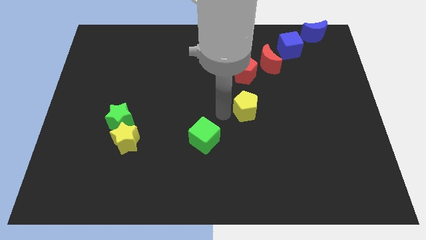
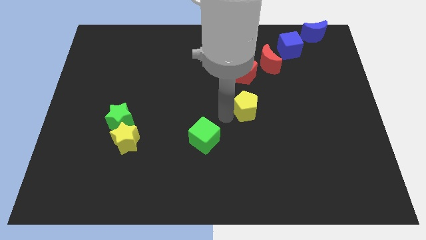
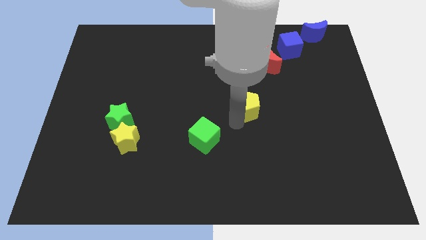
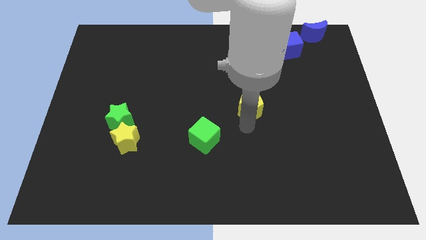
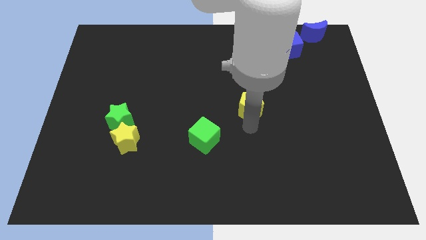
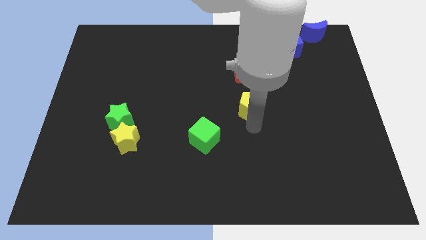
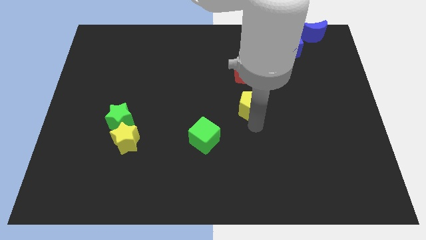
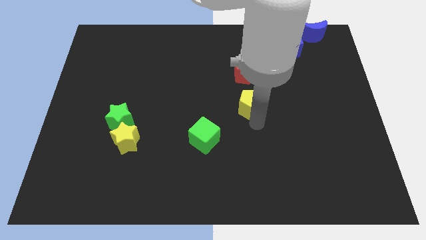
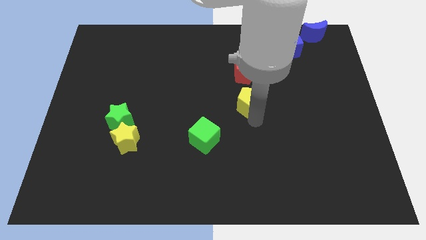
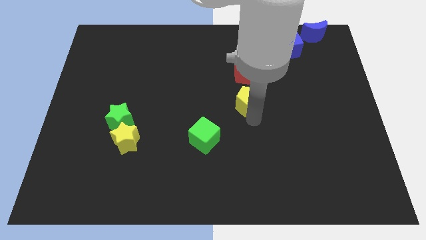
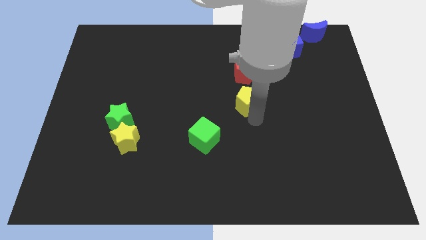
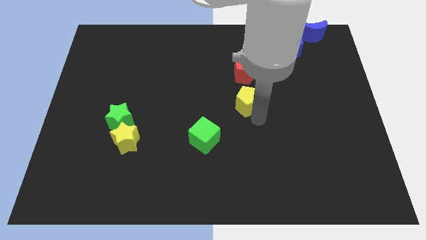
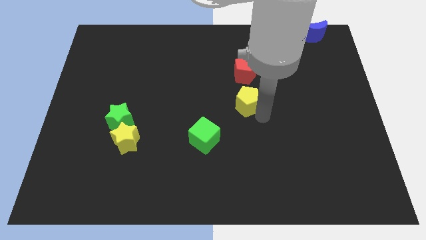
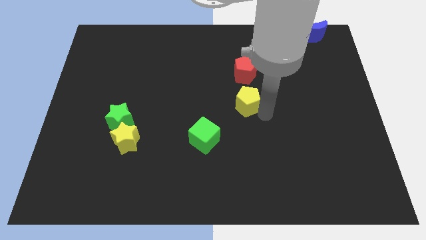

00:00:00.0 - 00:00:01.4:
place the yellow pentagon at the bottom of red pentagon

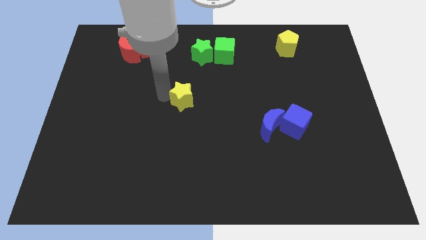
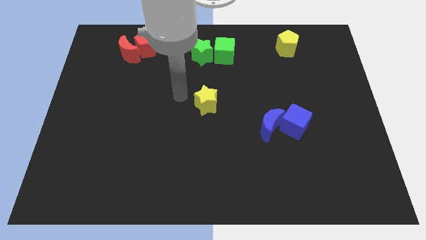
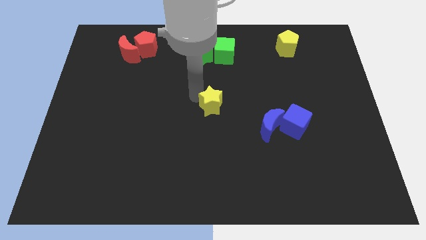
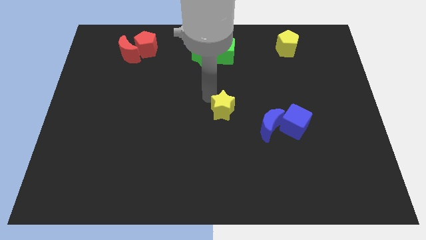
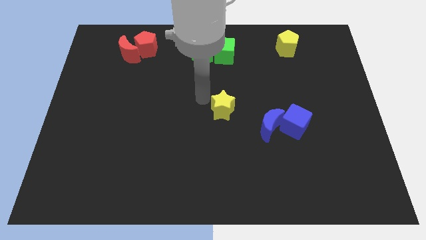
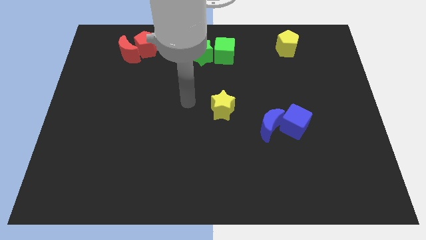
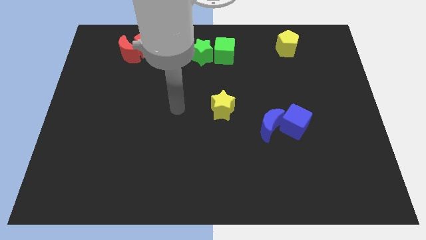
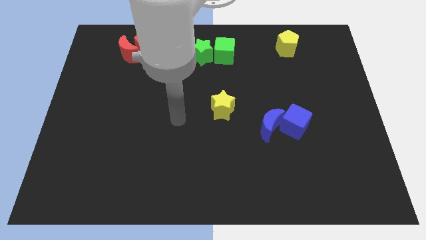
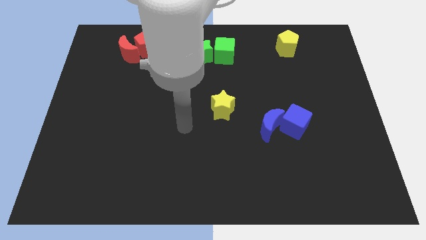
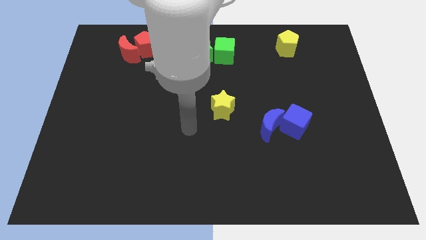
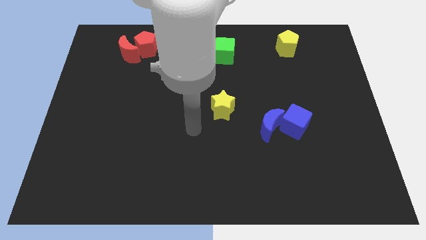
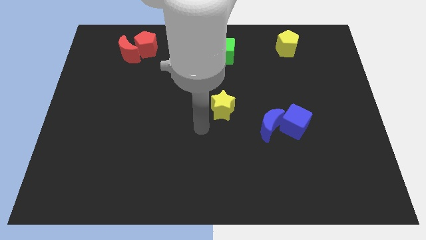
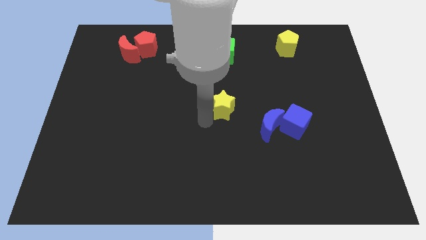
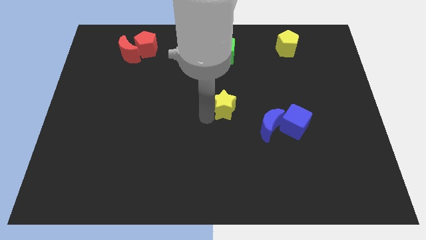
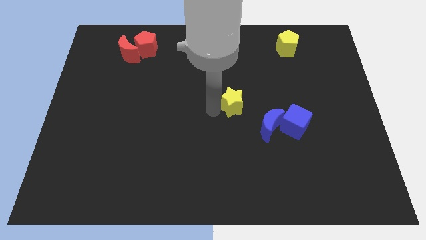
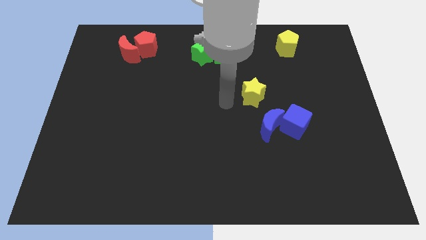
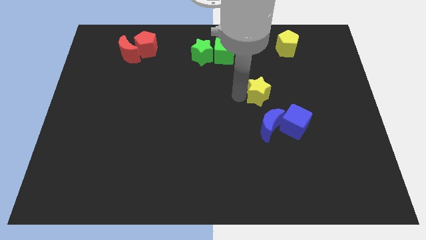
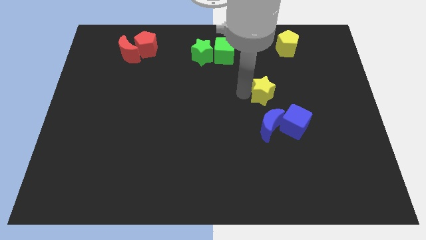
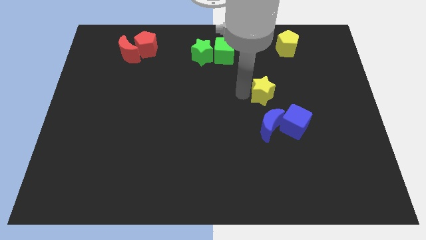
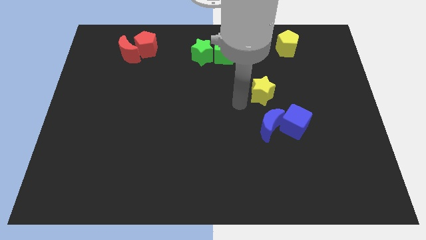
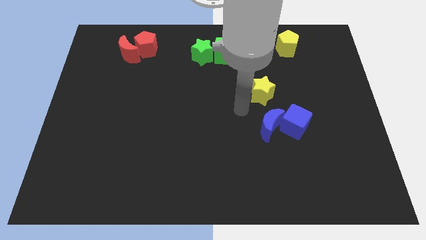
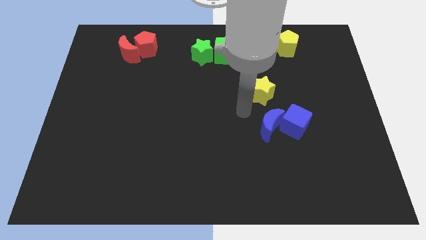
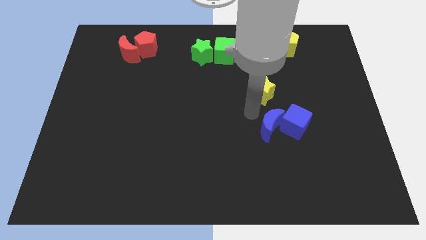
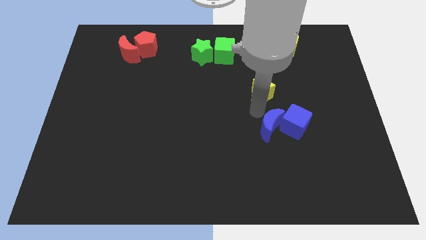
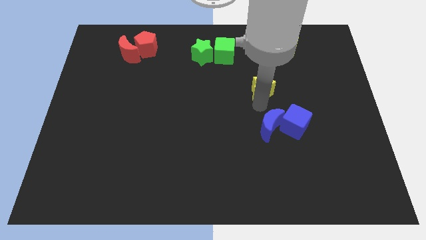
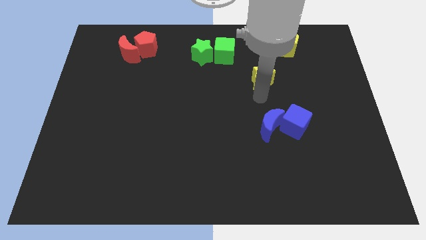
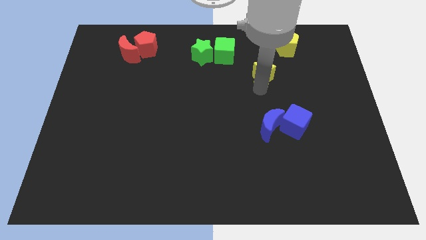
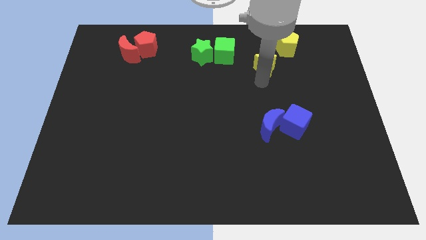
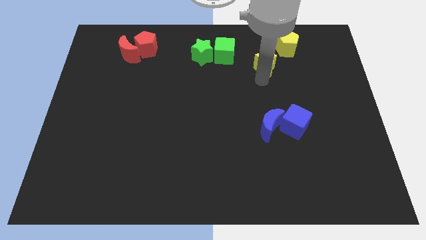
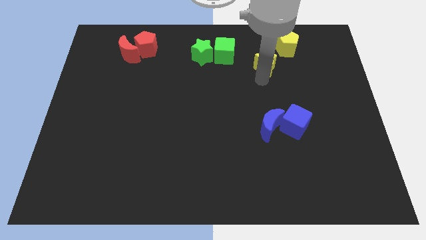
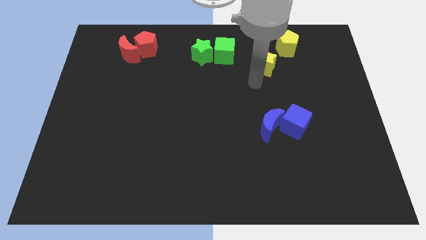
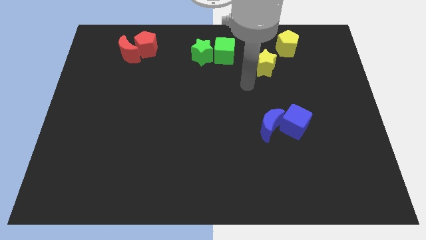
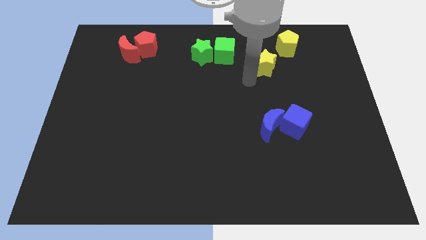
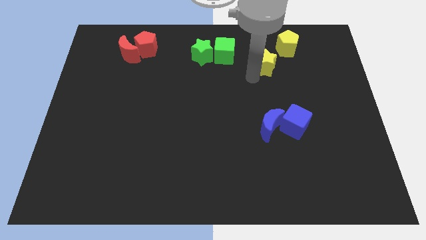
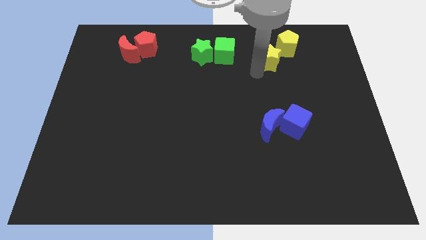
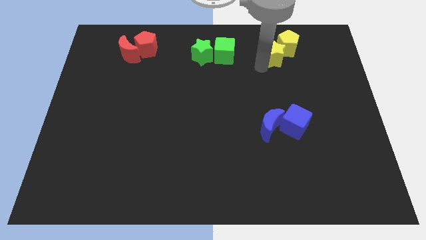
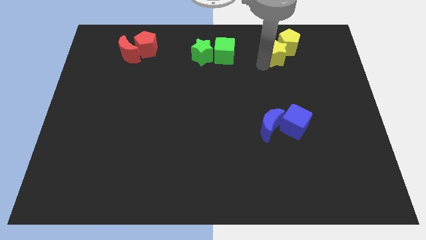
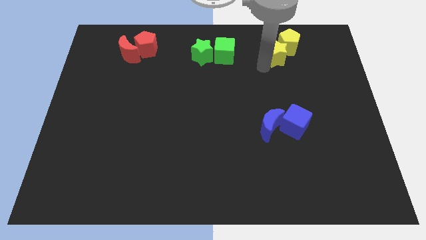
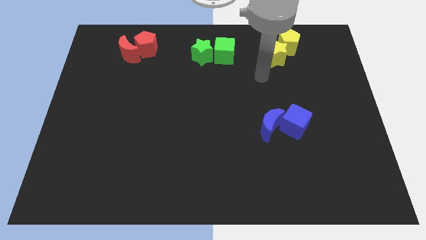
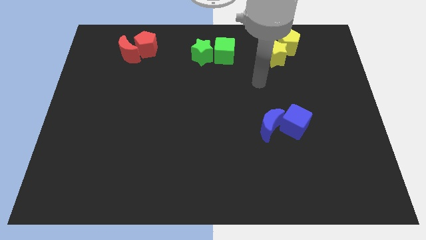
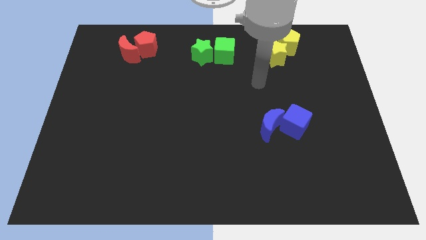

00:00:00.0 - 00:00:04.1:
move yellow star into yellow pentagon

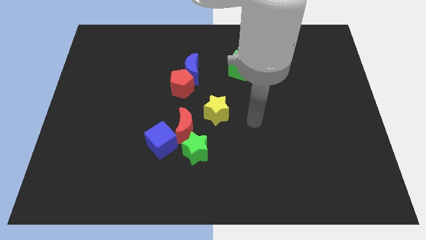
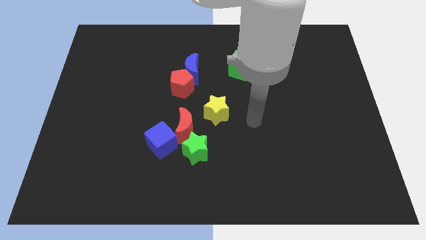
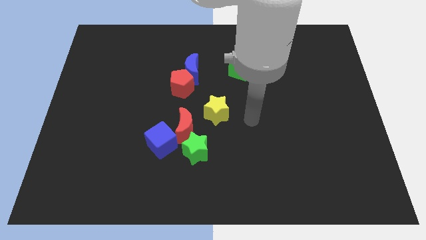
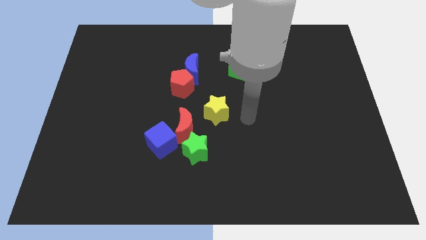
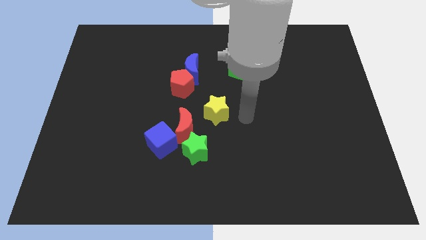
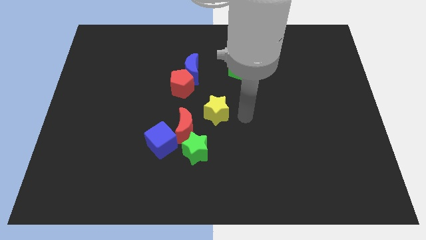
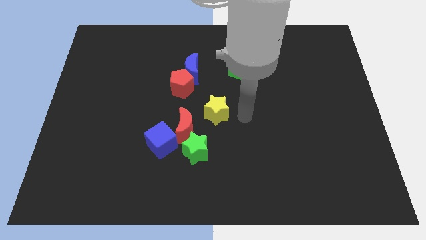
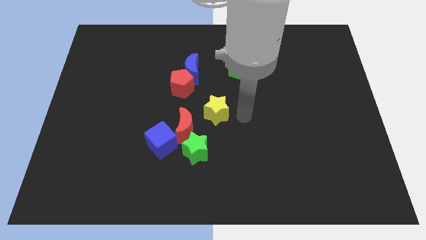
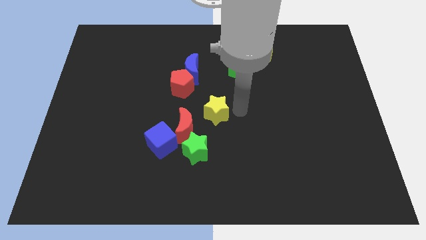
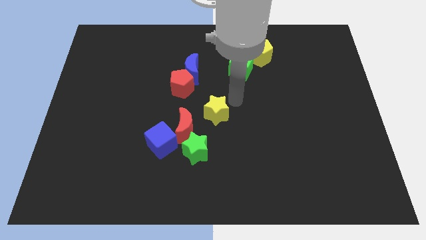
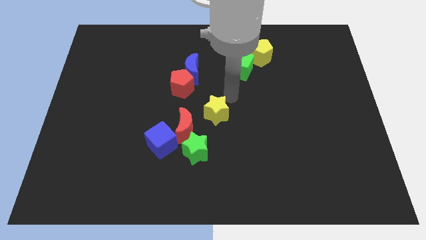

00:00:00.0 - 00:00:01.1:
move your hand close to yellow pentagon

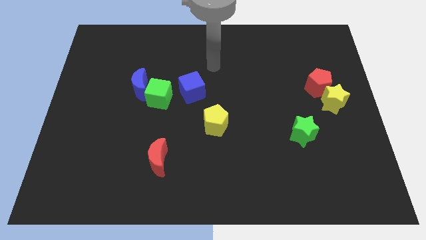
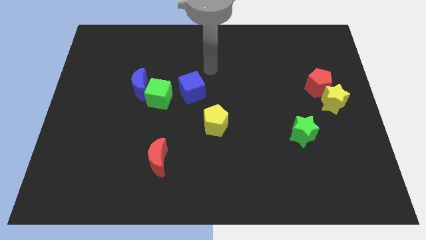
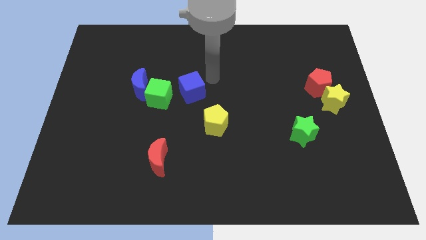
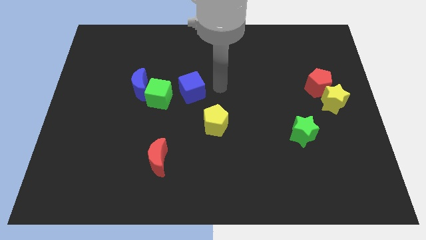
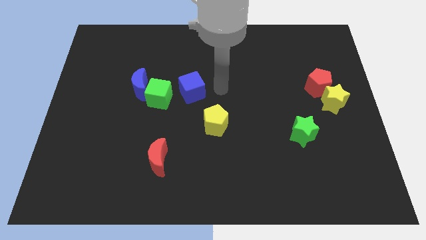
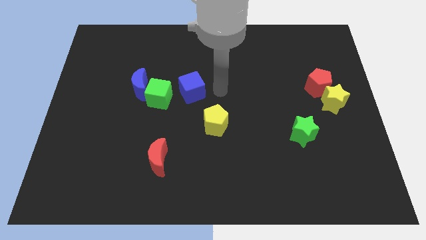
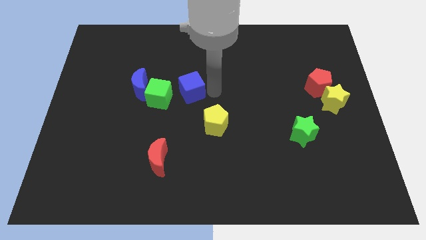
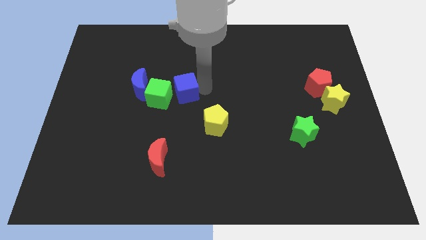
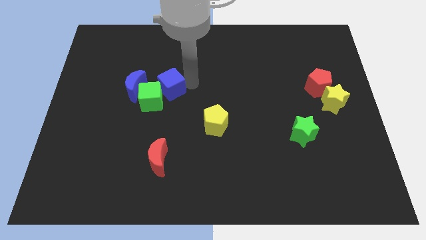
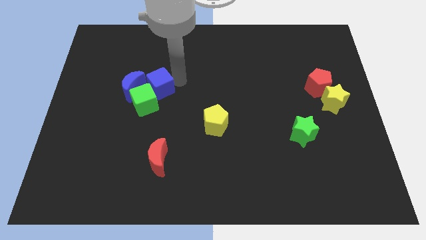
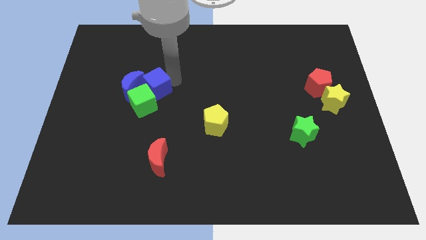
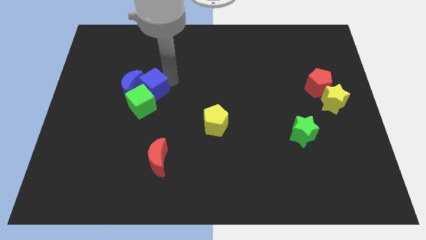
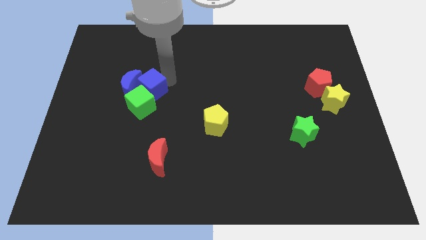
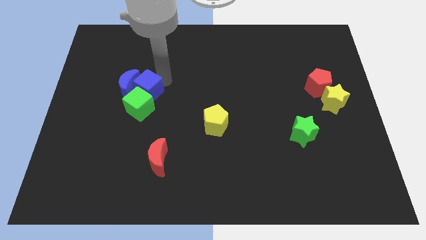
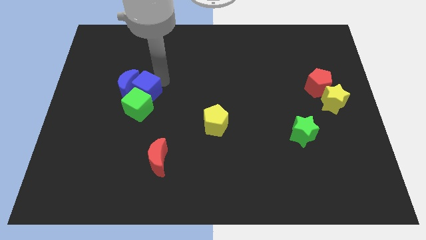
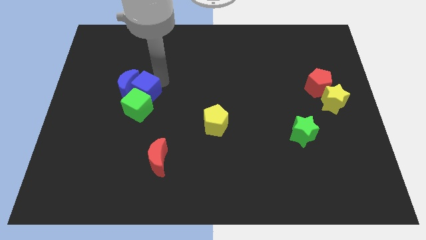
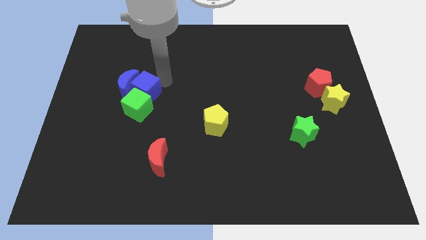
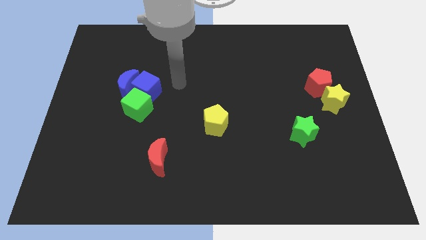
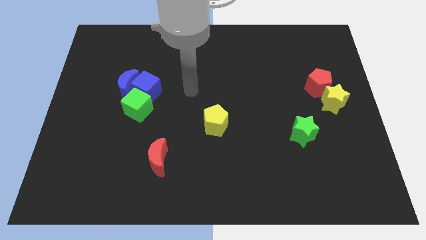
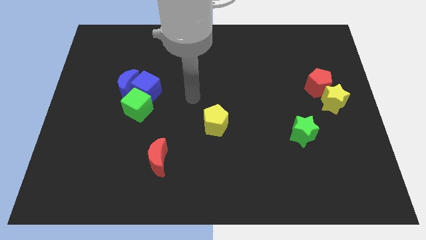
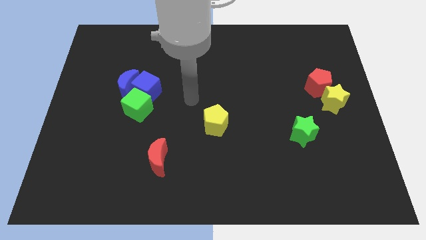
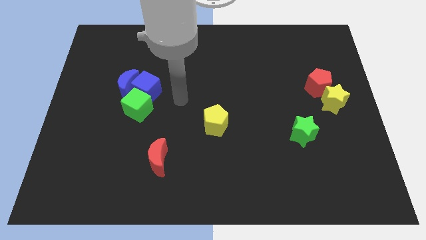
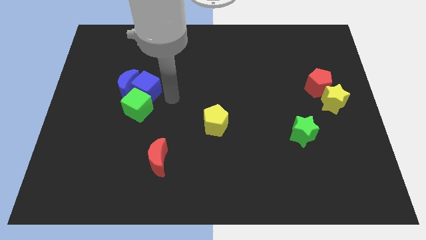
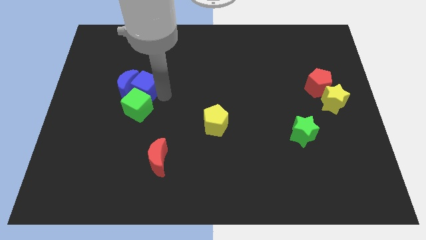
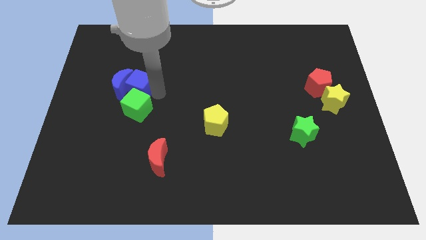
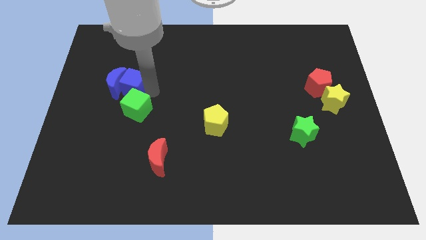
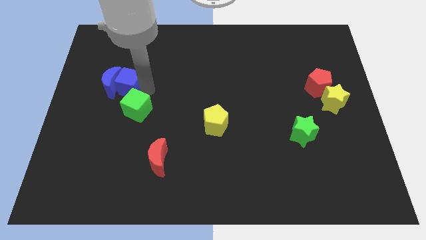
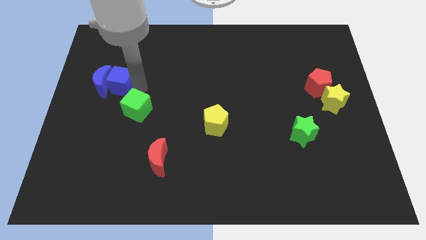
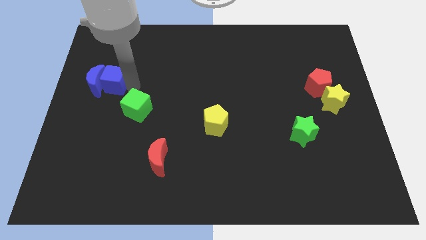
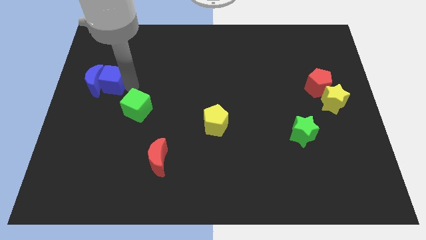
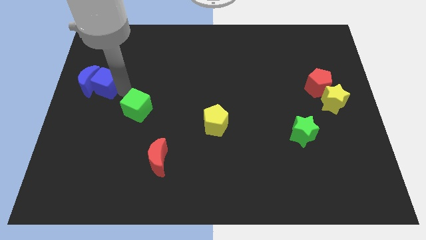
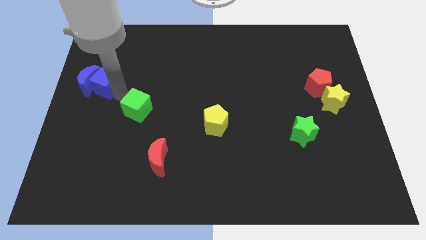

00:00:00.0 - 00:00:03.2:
push the blue cube into the blue moon
